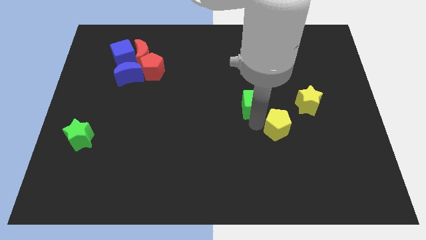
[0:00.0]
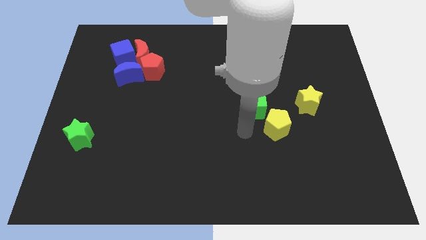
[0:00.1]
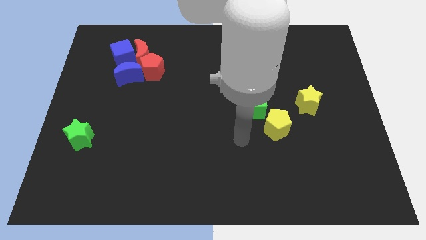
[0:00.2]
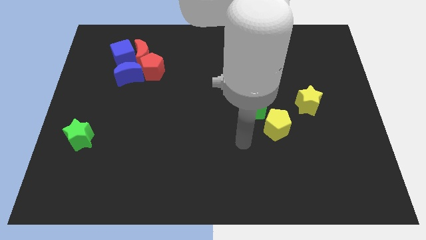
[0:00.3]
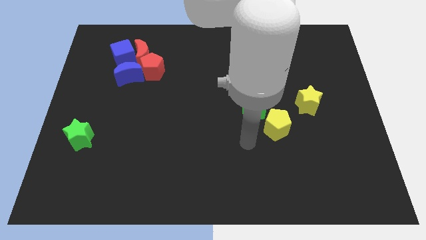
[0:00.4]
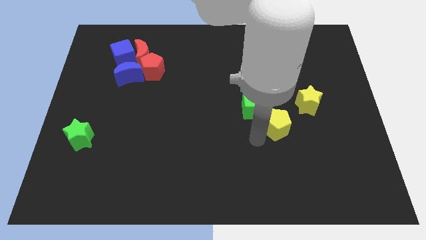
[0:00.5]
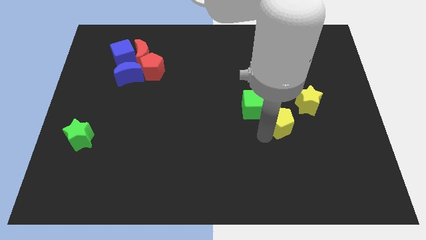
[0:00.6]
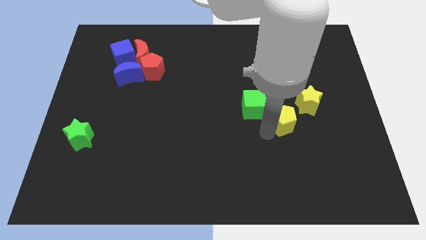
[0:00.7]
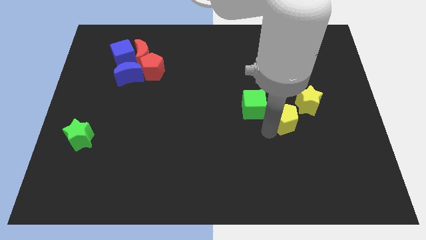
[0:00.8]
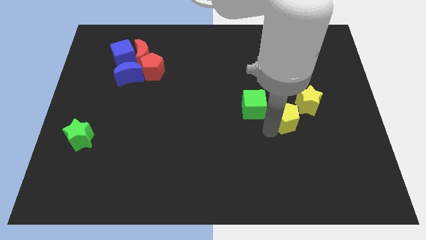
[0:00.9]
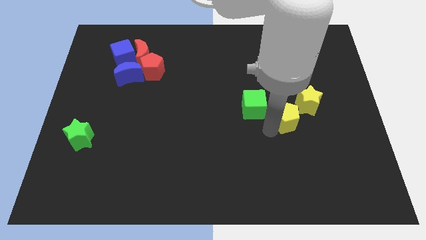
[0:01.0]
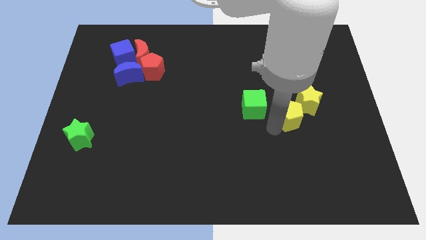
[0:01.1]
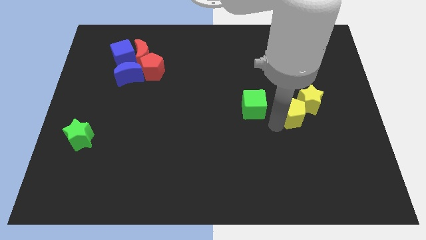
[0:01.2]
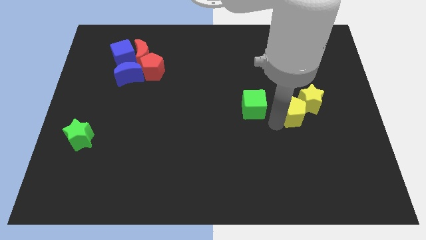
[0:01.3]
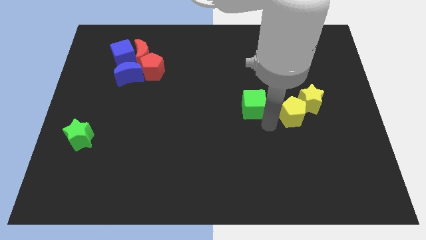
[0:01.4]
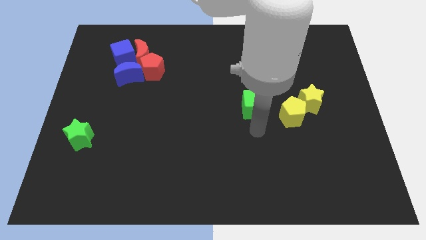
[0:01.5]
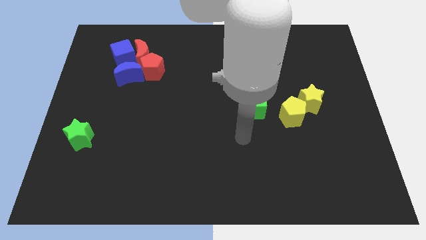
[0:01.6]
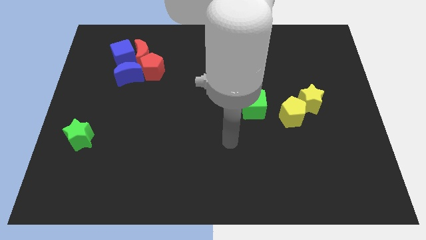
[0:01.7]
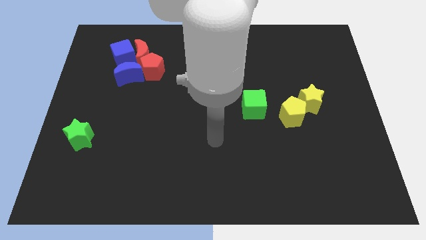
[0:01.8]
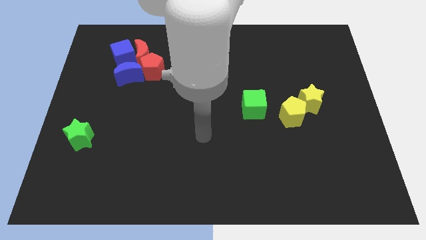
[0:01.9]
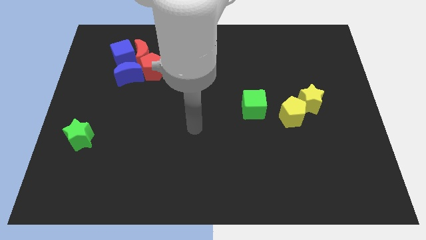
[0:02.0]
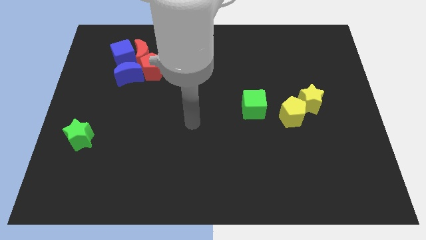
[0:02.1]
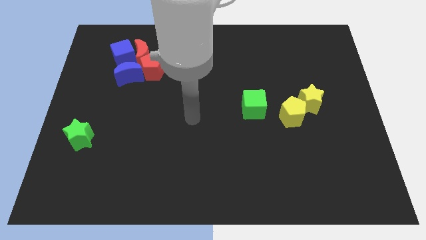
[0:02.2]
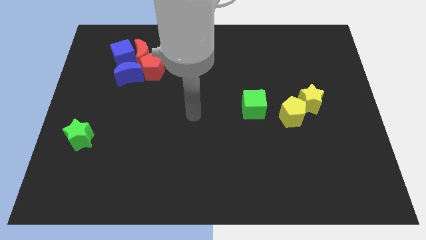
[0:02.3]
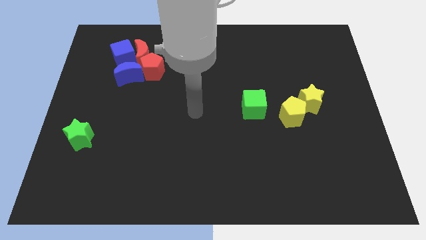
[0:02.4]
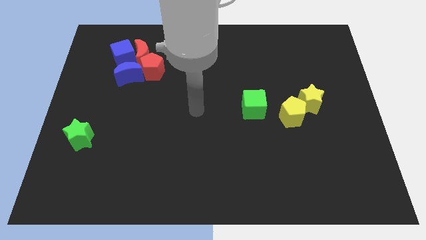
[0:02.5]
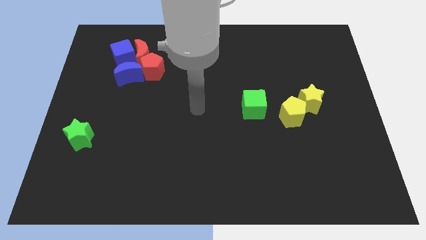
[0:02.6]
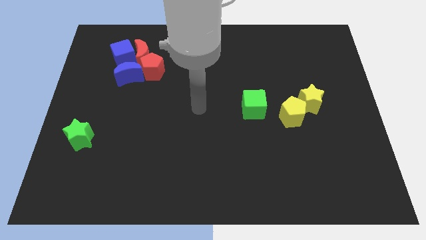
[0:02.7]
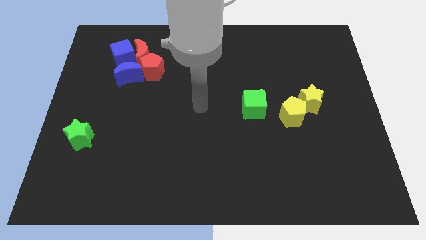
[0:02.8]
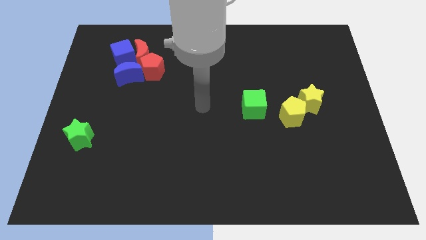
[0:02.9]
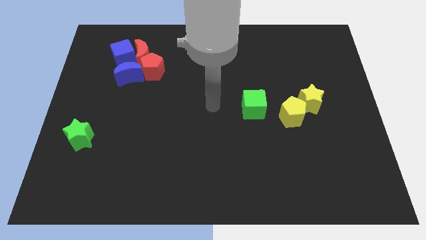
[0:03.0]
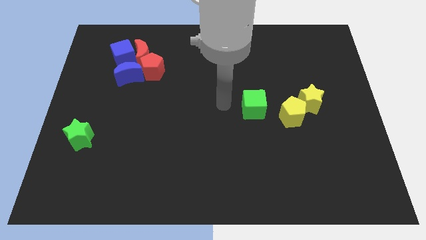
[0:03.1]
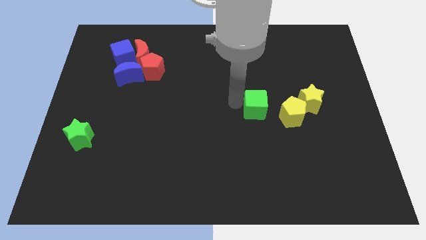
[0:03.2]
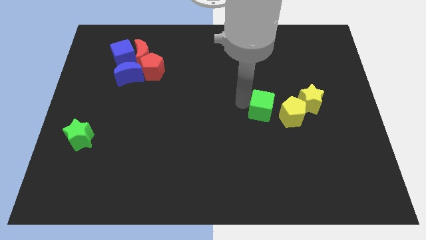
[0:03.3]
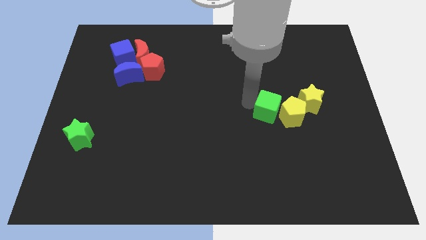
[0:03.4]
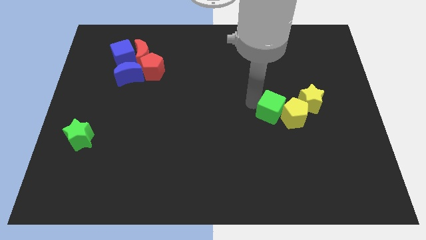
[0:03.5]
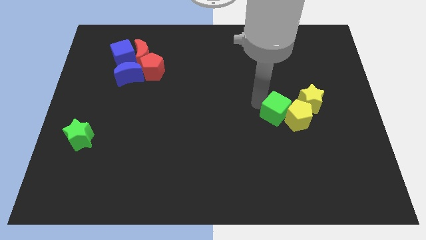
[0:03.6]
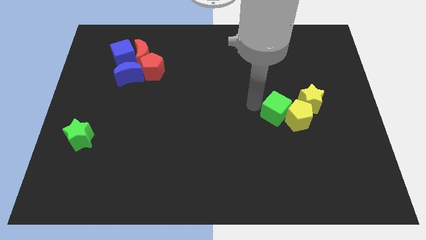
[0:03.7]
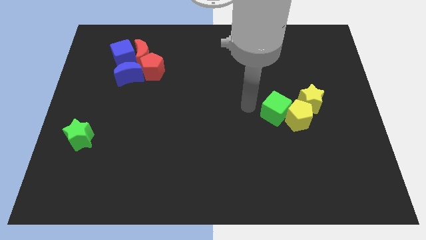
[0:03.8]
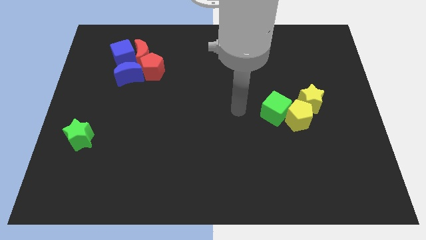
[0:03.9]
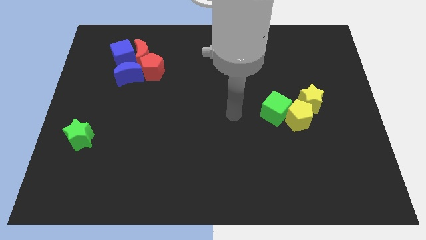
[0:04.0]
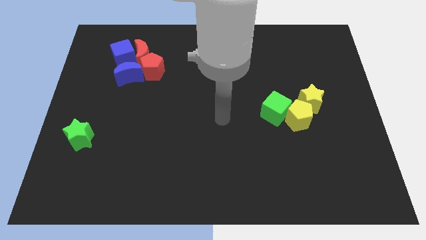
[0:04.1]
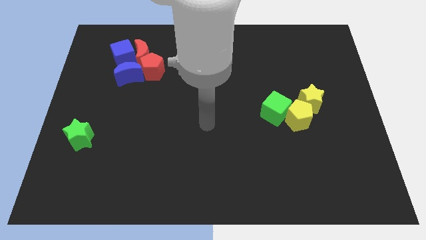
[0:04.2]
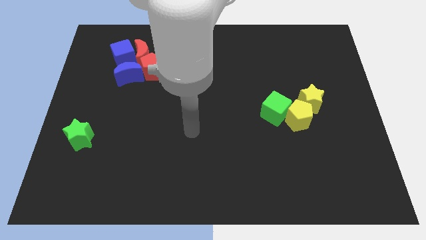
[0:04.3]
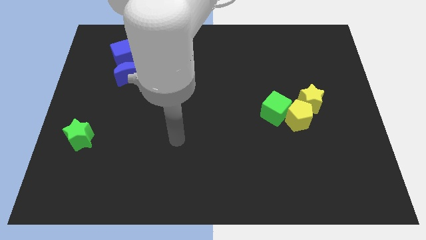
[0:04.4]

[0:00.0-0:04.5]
push the yellow pentagon and green cube in to the yellow star

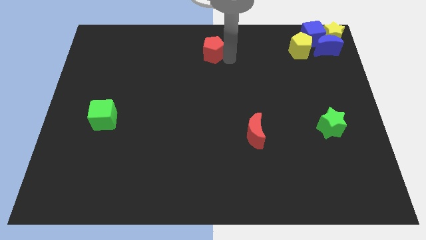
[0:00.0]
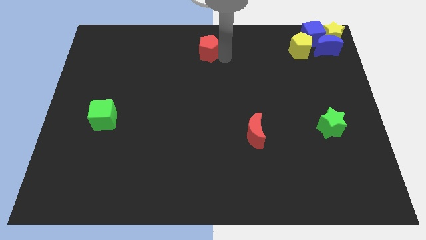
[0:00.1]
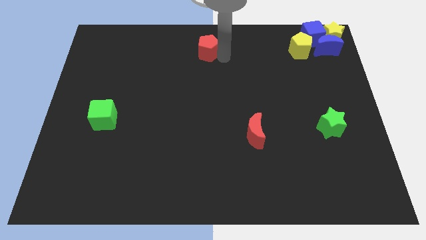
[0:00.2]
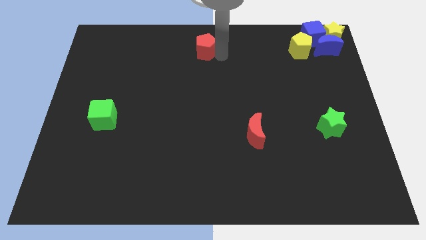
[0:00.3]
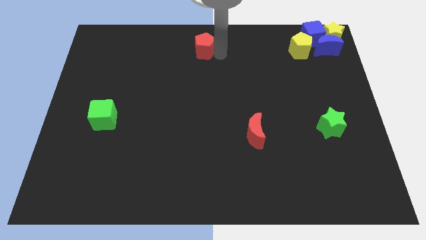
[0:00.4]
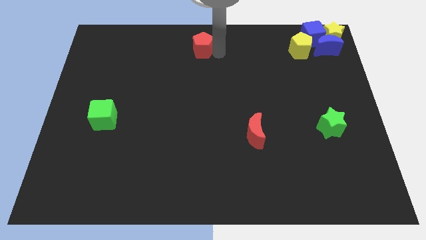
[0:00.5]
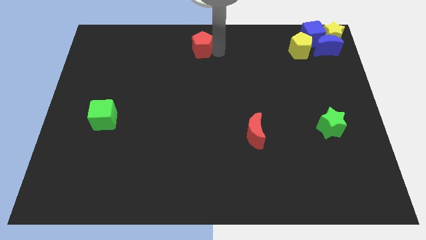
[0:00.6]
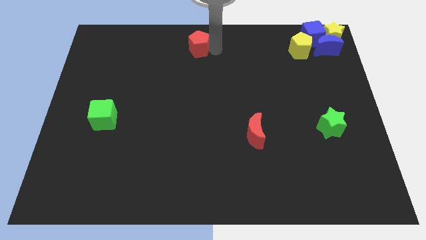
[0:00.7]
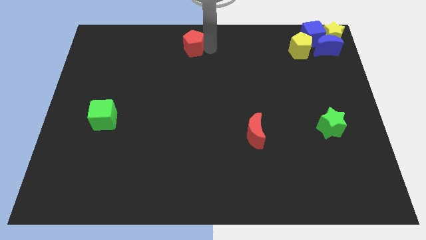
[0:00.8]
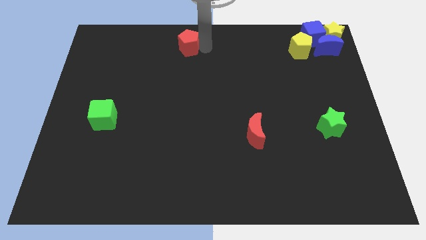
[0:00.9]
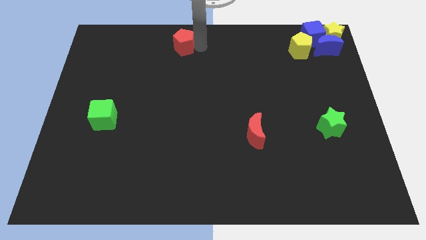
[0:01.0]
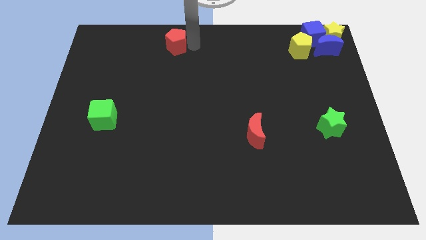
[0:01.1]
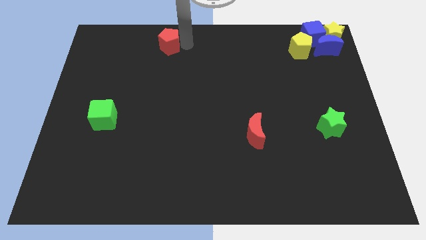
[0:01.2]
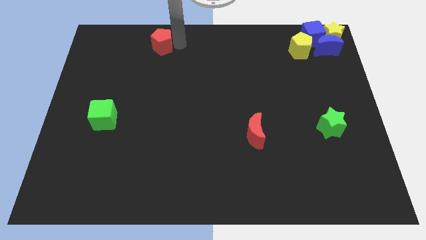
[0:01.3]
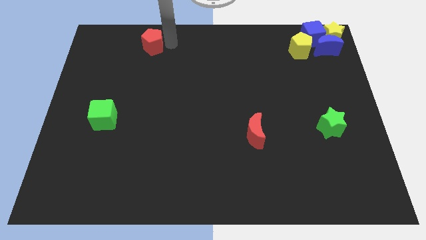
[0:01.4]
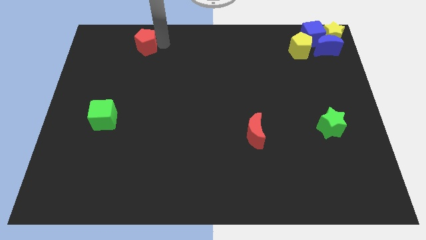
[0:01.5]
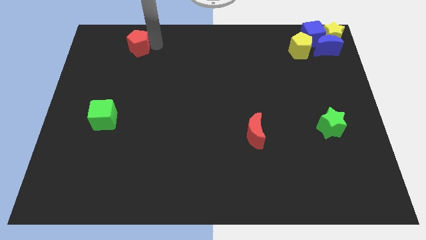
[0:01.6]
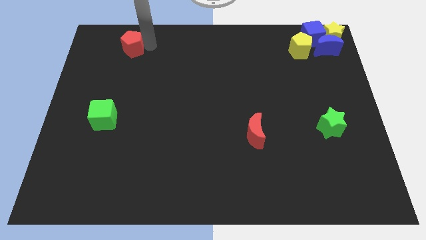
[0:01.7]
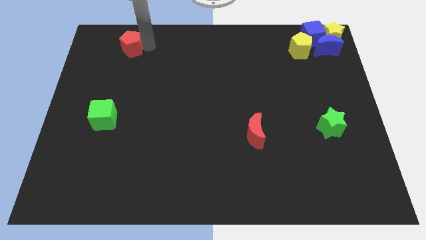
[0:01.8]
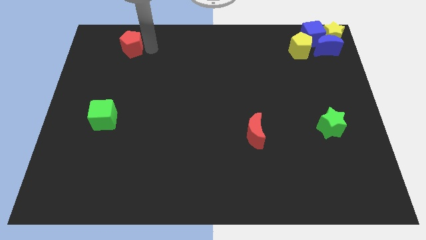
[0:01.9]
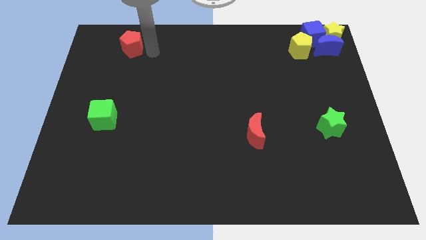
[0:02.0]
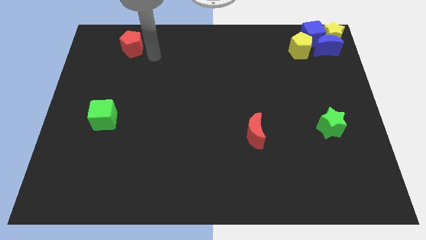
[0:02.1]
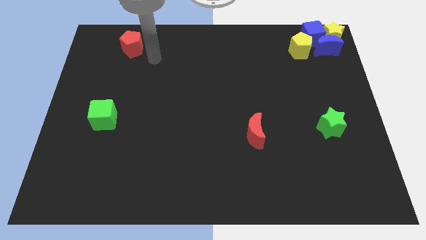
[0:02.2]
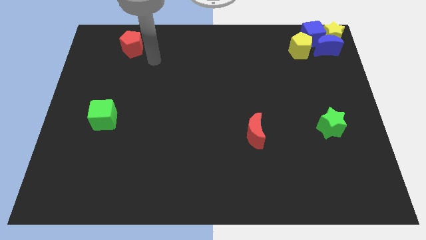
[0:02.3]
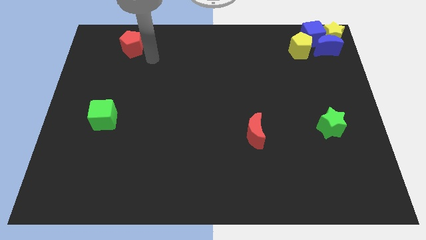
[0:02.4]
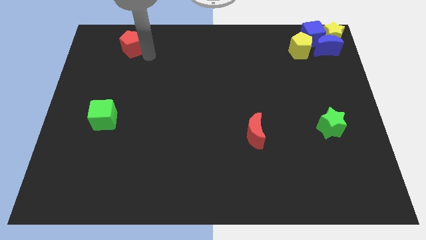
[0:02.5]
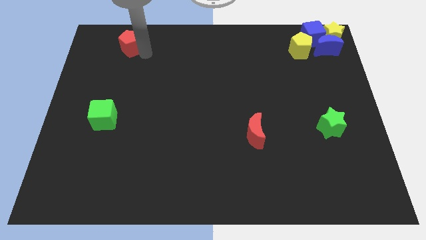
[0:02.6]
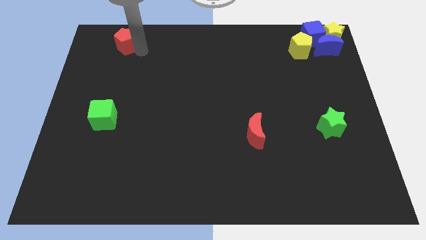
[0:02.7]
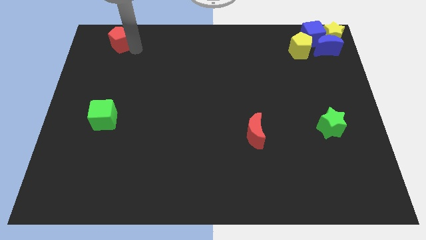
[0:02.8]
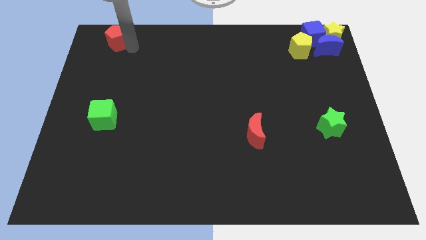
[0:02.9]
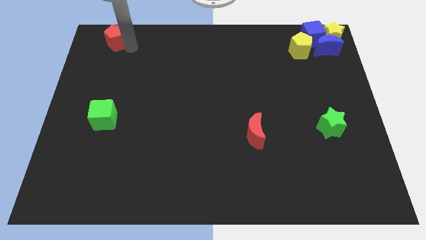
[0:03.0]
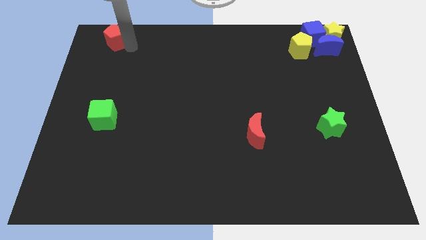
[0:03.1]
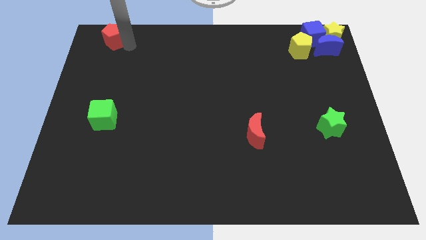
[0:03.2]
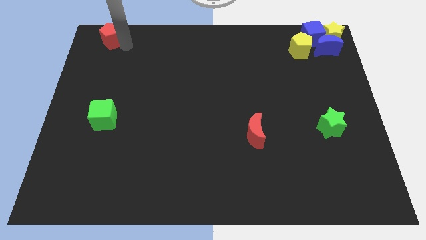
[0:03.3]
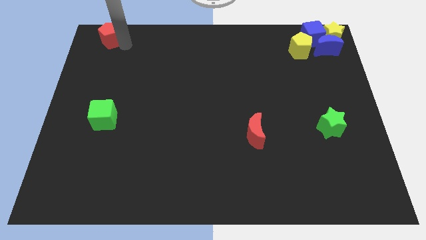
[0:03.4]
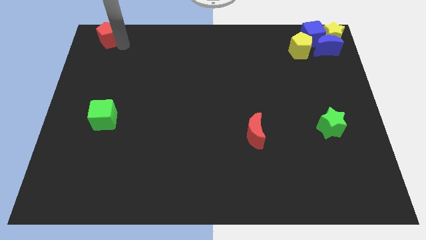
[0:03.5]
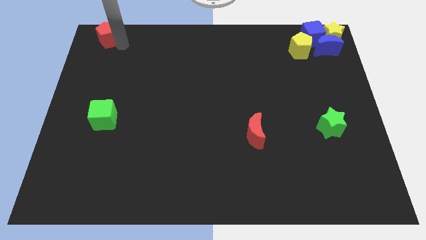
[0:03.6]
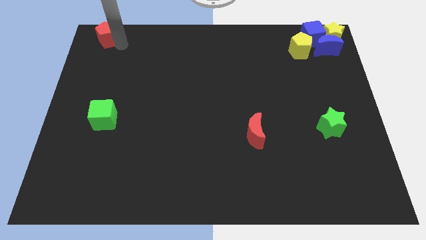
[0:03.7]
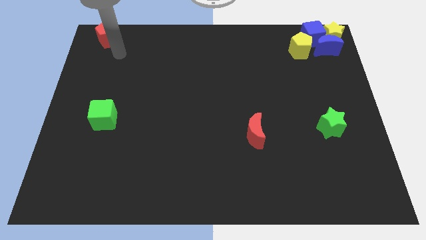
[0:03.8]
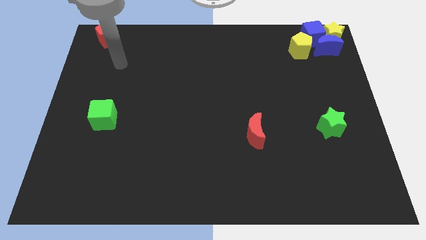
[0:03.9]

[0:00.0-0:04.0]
slightly move the red pentagon to the left side of the board

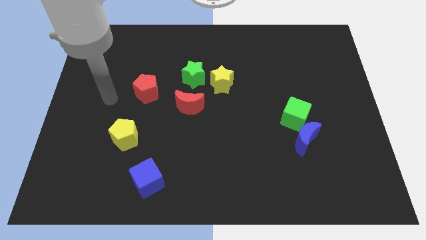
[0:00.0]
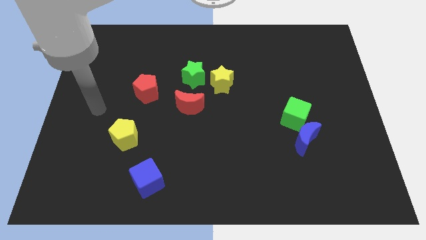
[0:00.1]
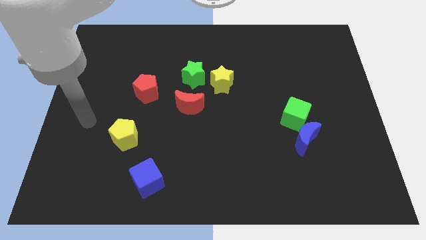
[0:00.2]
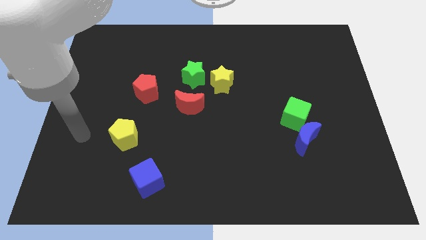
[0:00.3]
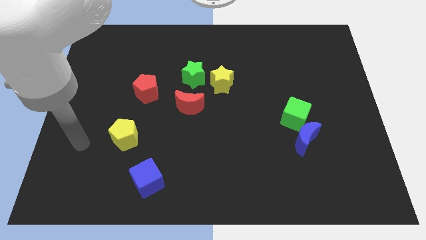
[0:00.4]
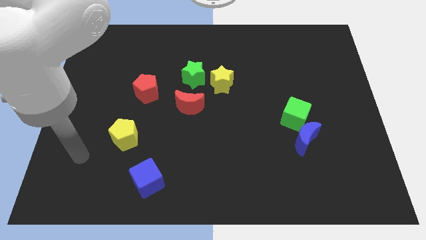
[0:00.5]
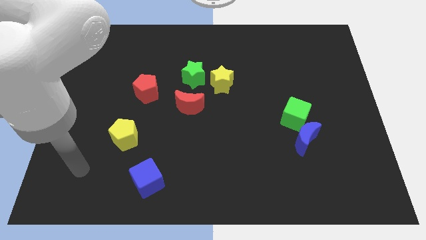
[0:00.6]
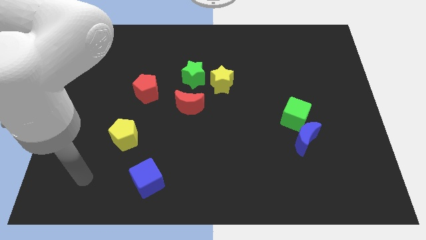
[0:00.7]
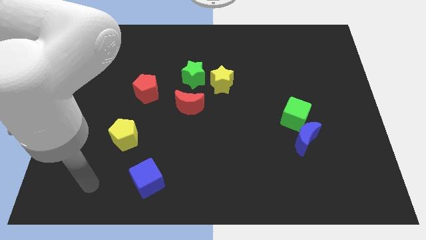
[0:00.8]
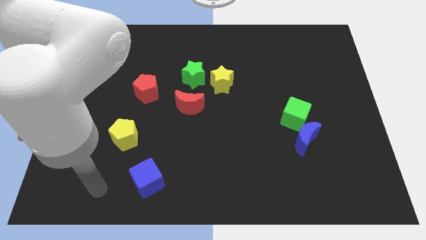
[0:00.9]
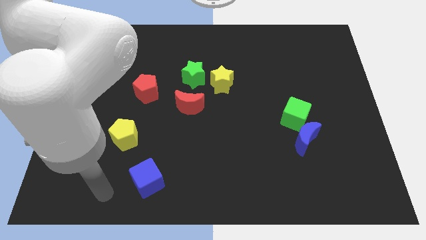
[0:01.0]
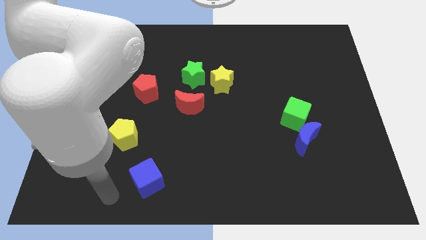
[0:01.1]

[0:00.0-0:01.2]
point your arm at the left of the blue cube
